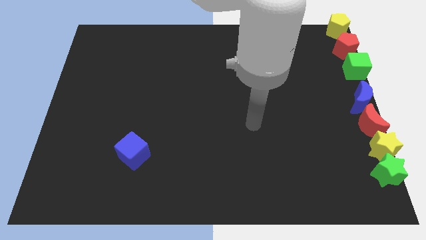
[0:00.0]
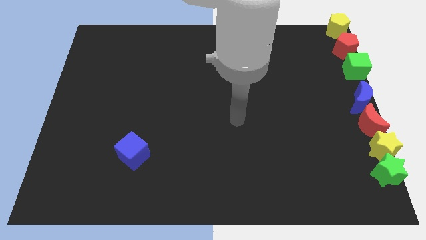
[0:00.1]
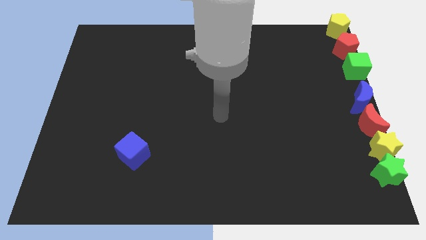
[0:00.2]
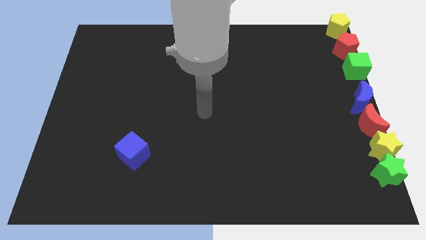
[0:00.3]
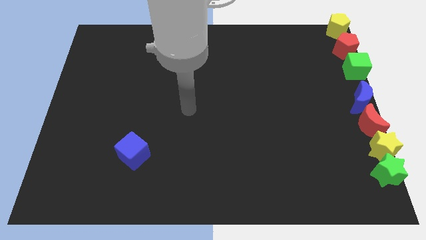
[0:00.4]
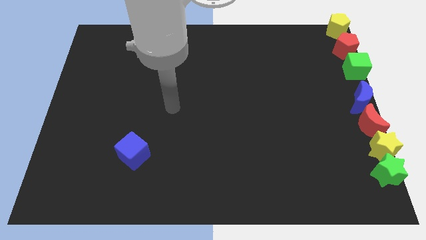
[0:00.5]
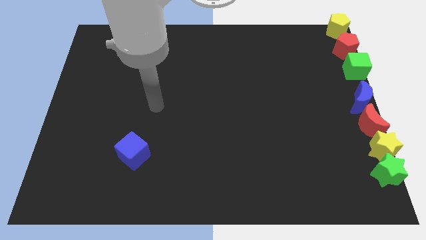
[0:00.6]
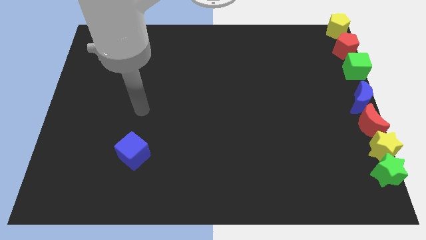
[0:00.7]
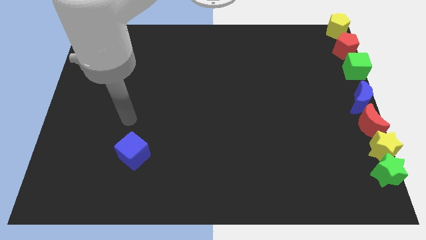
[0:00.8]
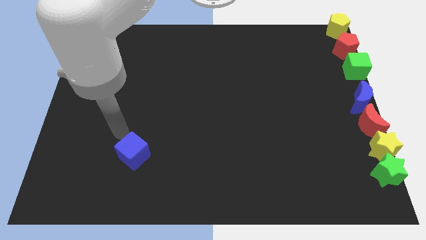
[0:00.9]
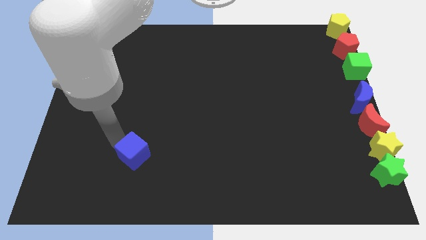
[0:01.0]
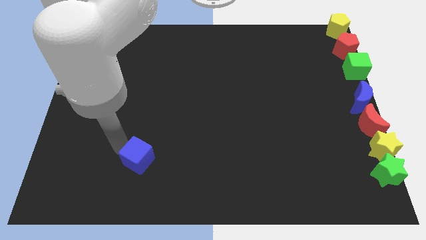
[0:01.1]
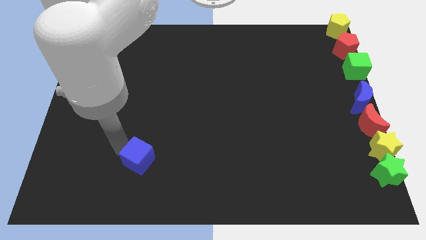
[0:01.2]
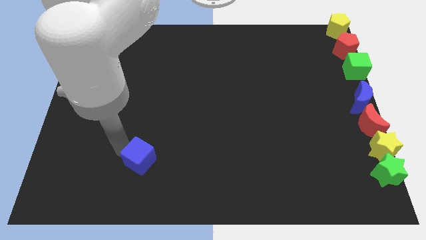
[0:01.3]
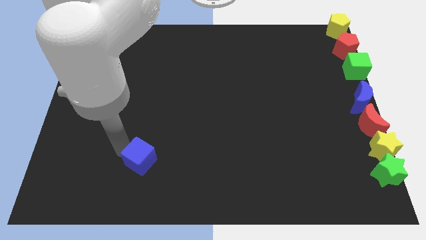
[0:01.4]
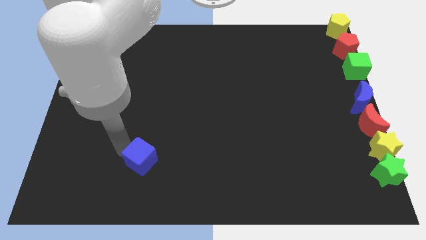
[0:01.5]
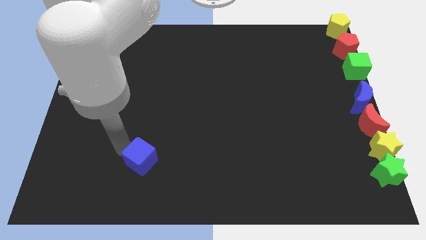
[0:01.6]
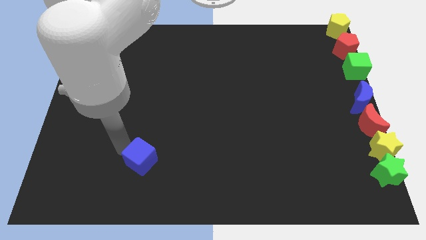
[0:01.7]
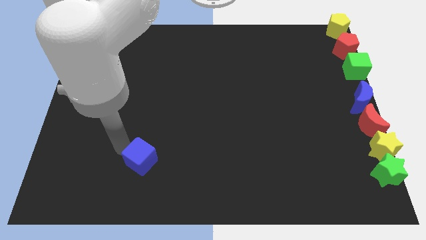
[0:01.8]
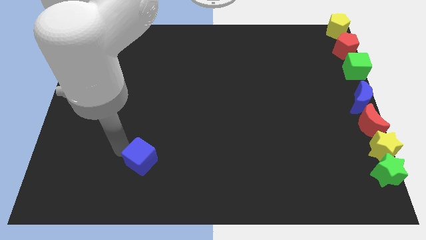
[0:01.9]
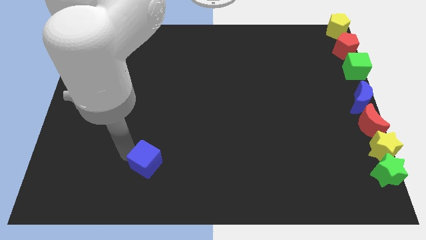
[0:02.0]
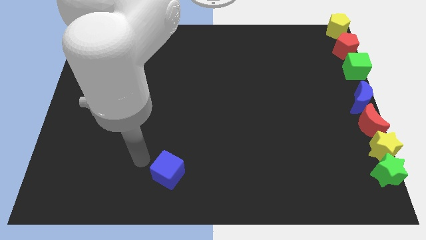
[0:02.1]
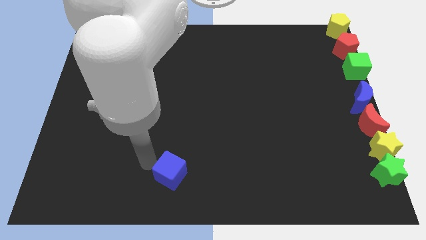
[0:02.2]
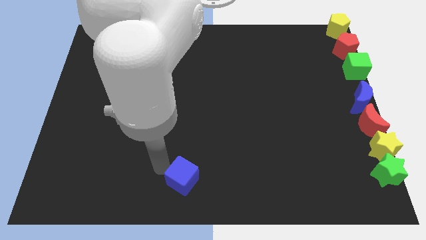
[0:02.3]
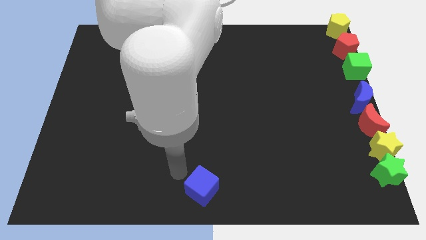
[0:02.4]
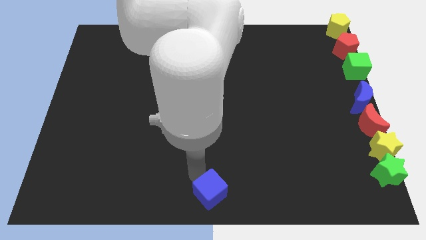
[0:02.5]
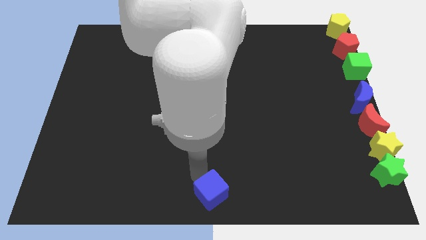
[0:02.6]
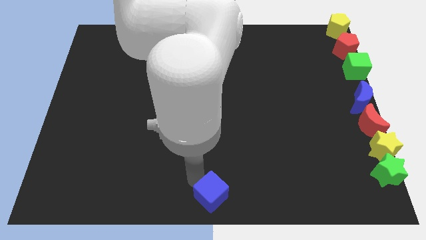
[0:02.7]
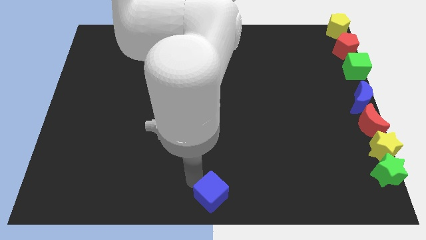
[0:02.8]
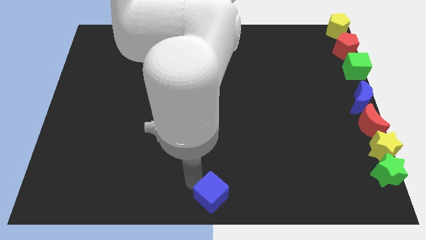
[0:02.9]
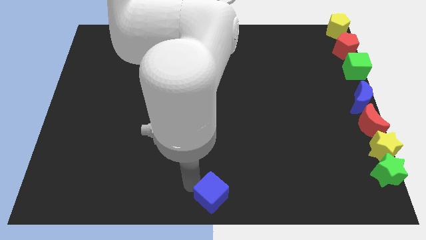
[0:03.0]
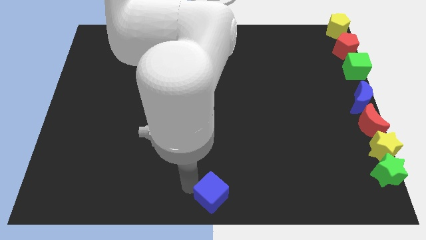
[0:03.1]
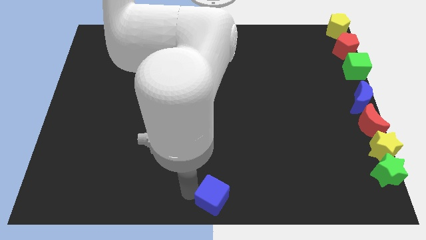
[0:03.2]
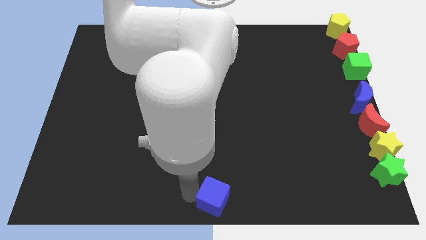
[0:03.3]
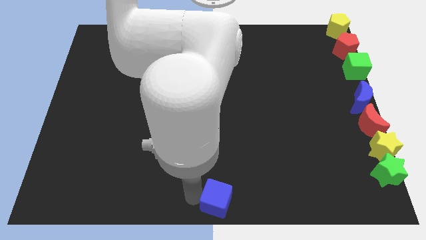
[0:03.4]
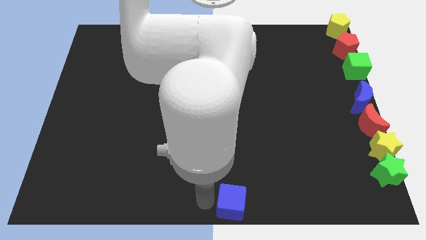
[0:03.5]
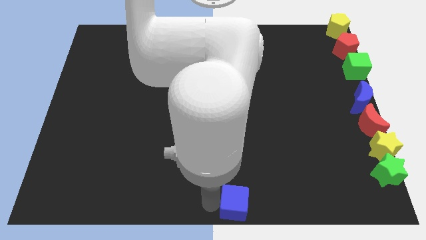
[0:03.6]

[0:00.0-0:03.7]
move the blue cube to the bottom center

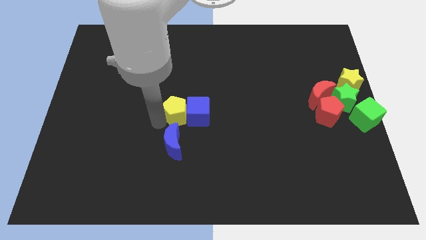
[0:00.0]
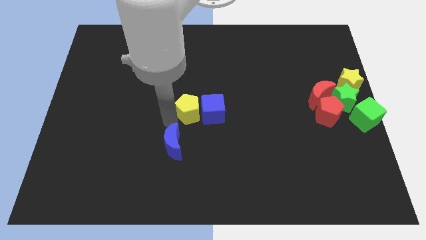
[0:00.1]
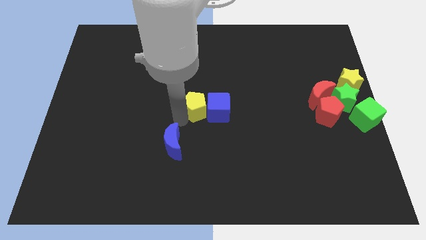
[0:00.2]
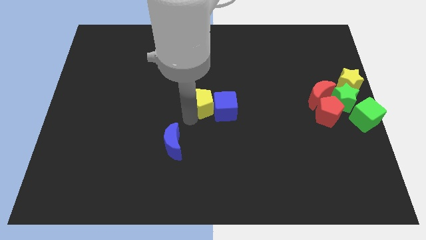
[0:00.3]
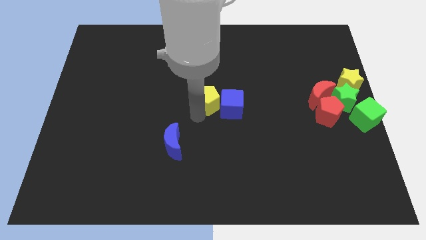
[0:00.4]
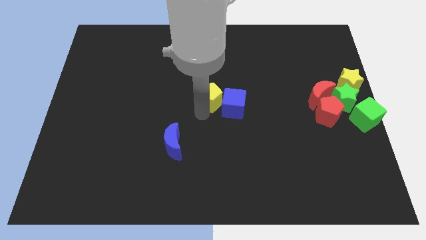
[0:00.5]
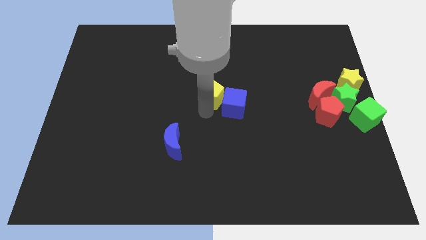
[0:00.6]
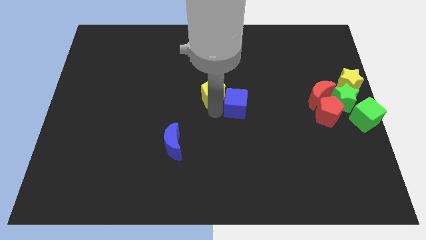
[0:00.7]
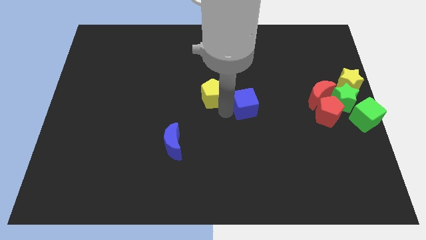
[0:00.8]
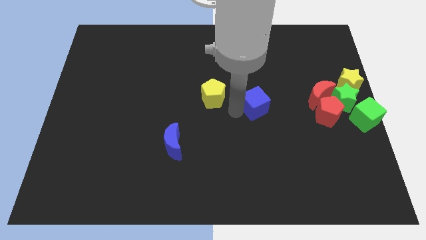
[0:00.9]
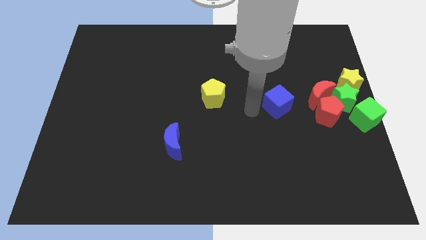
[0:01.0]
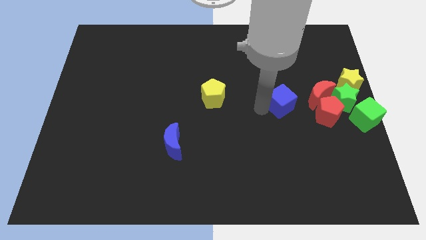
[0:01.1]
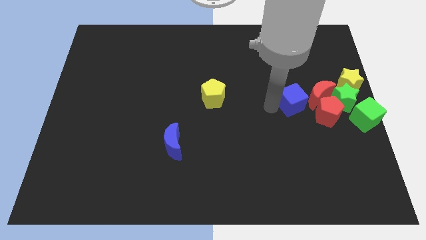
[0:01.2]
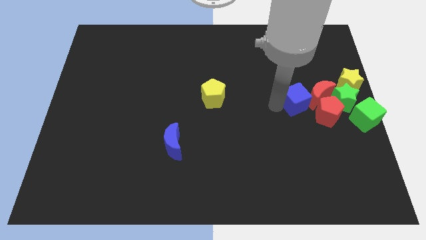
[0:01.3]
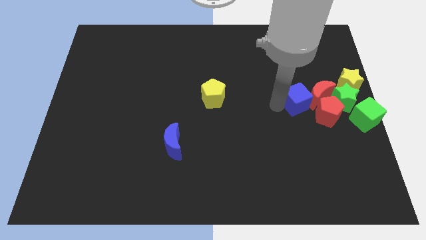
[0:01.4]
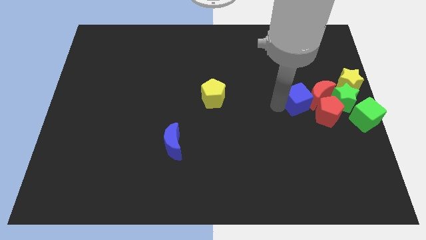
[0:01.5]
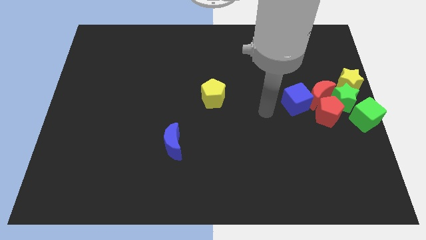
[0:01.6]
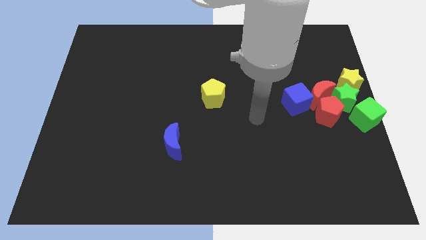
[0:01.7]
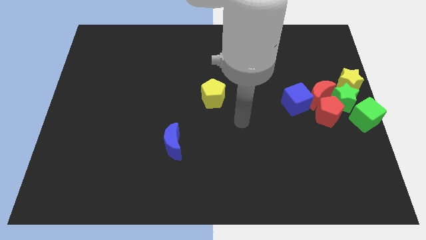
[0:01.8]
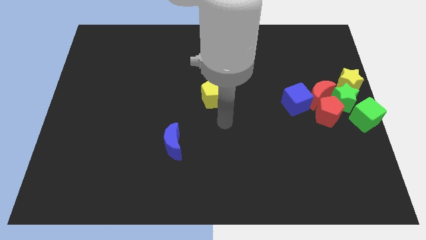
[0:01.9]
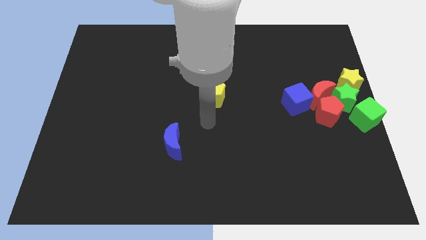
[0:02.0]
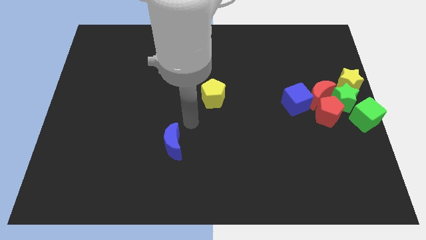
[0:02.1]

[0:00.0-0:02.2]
push the blue cube left to the red moon

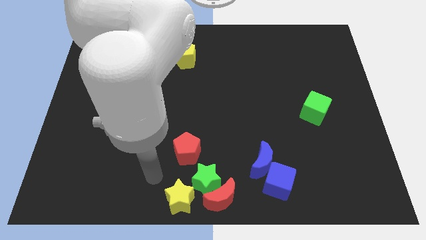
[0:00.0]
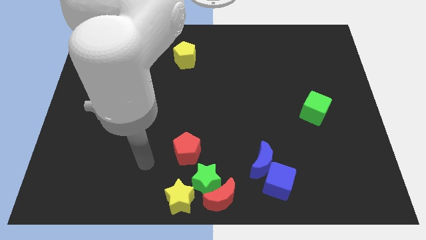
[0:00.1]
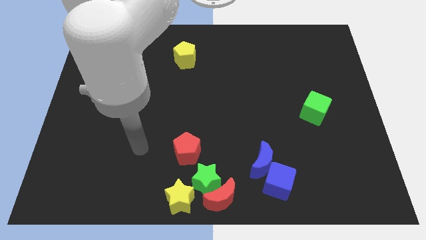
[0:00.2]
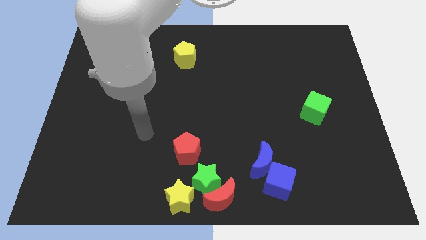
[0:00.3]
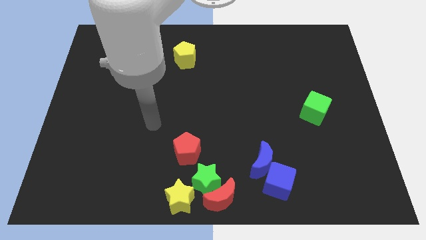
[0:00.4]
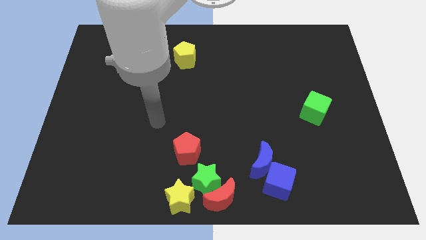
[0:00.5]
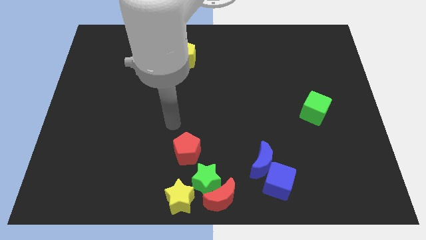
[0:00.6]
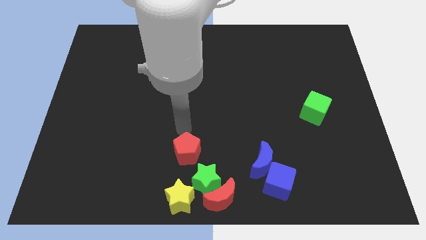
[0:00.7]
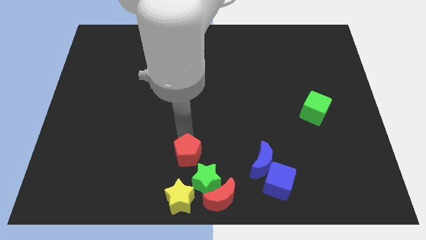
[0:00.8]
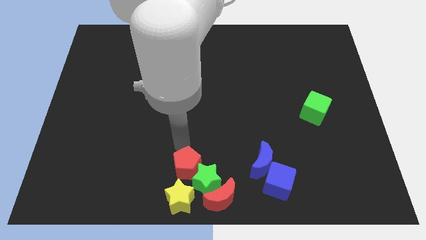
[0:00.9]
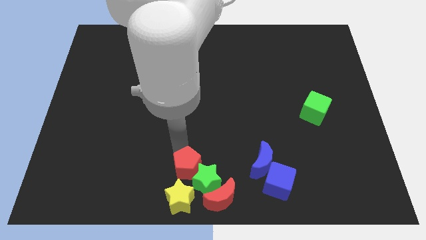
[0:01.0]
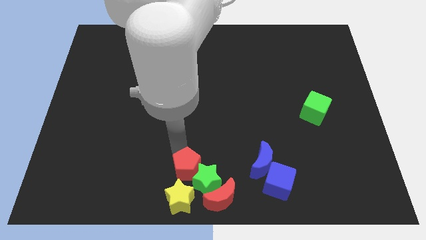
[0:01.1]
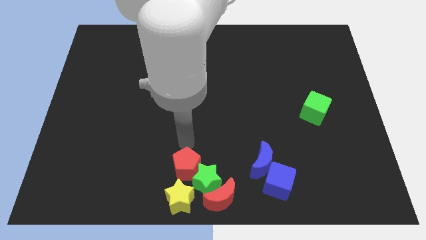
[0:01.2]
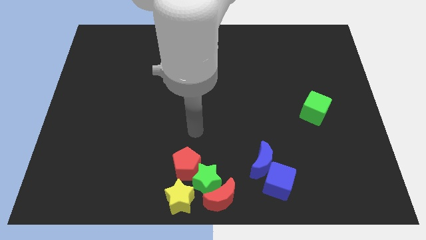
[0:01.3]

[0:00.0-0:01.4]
move the red pentagon into the green star

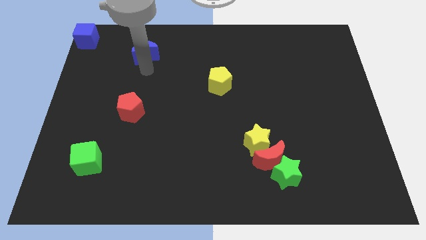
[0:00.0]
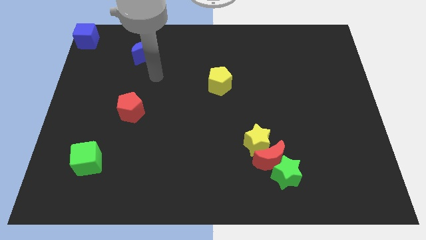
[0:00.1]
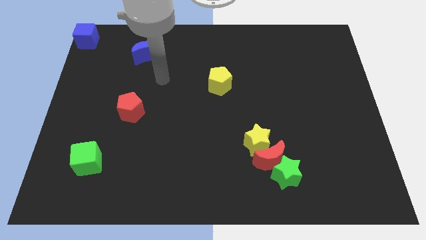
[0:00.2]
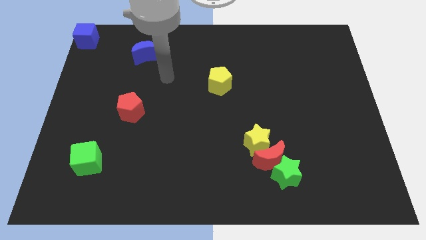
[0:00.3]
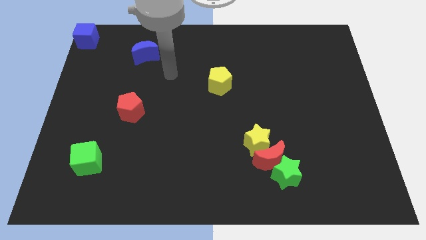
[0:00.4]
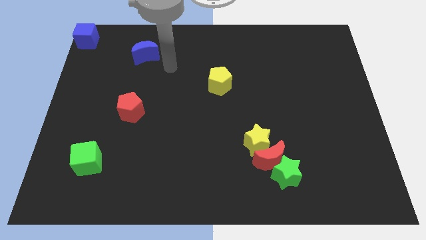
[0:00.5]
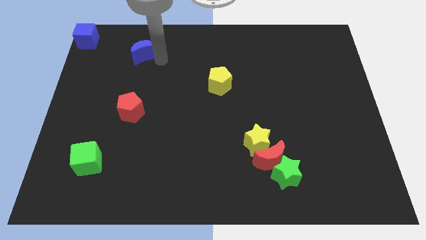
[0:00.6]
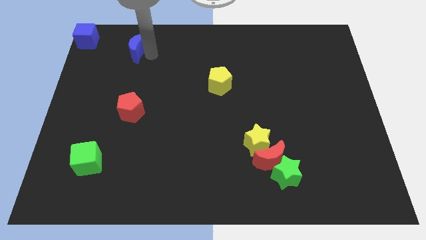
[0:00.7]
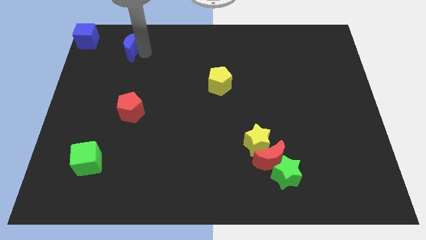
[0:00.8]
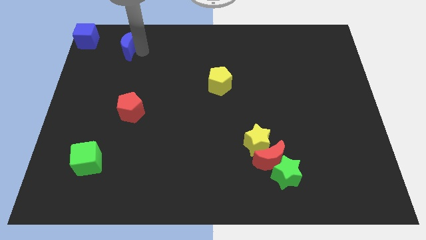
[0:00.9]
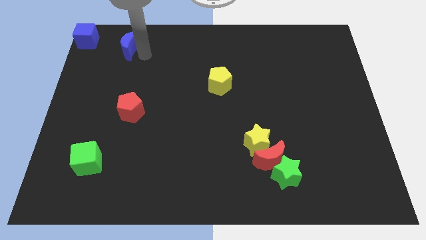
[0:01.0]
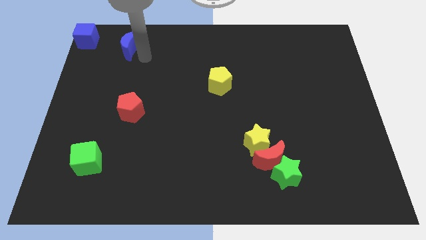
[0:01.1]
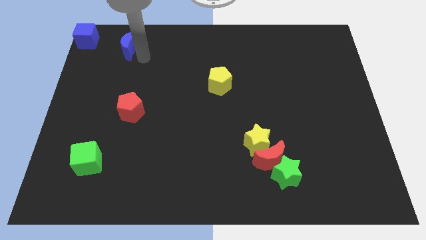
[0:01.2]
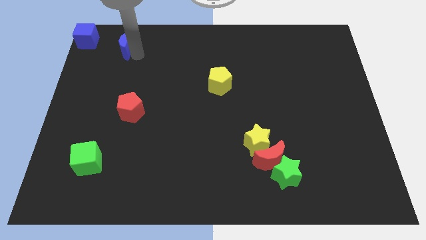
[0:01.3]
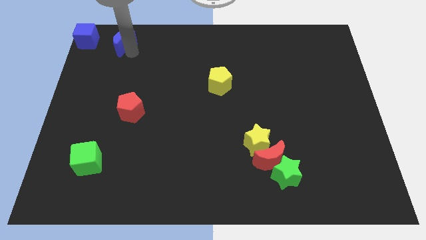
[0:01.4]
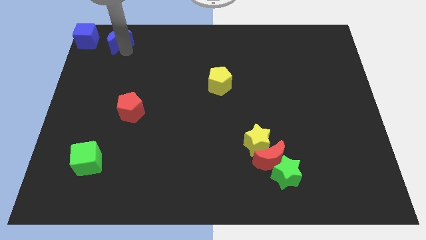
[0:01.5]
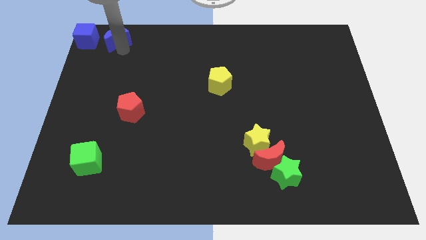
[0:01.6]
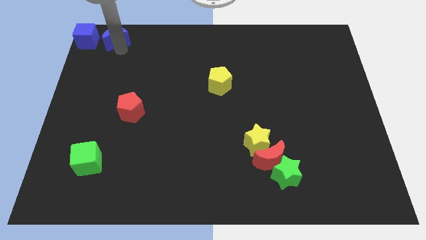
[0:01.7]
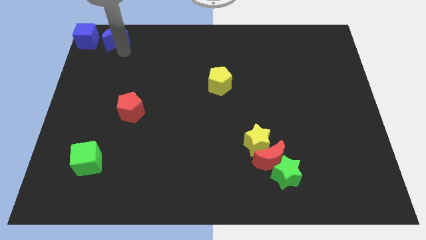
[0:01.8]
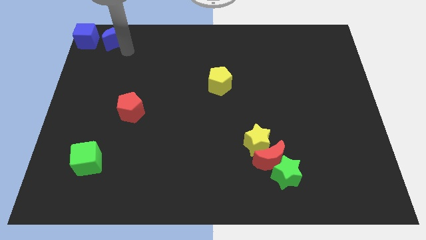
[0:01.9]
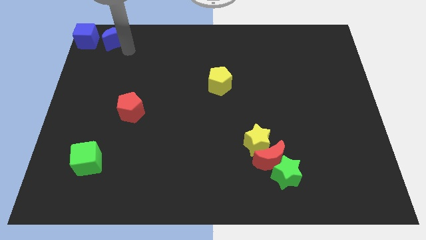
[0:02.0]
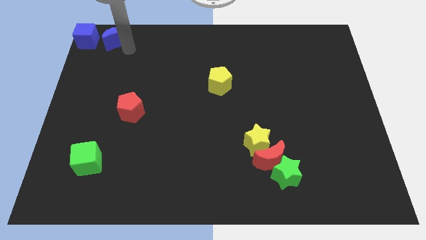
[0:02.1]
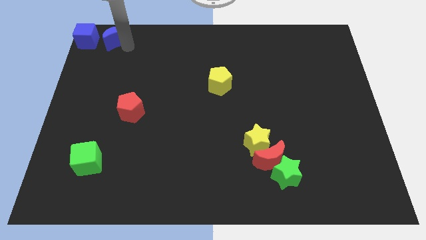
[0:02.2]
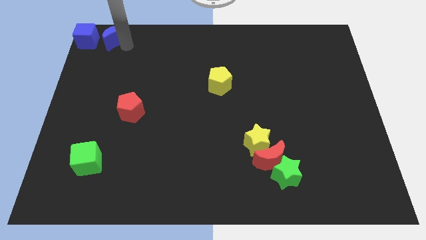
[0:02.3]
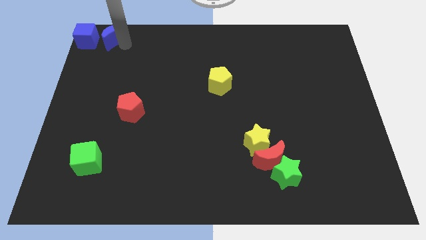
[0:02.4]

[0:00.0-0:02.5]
move the blue moon close to the blue cube
